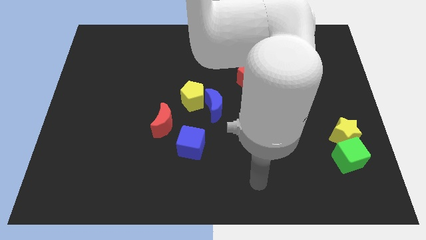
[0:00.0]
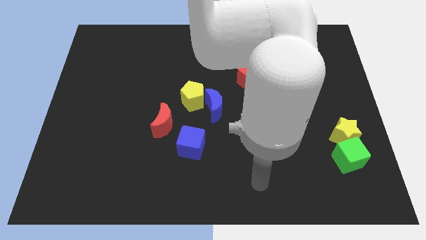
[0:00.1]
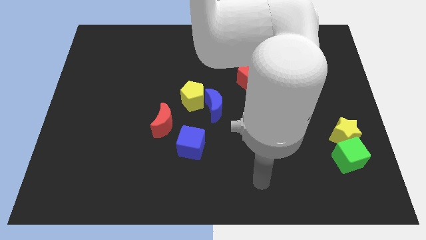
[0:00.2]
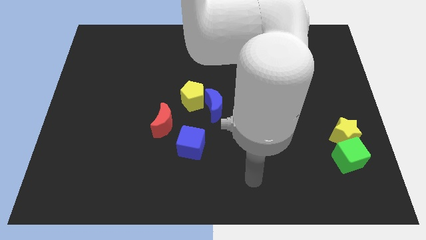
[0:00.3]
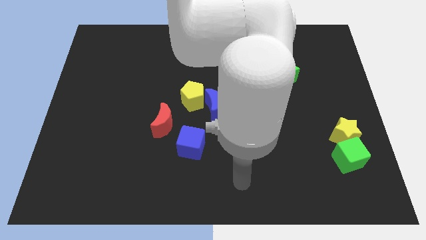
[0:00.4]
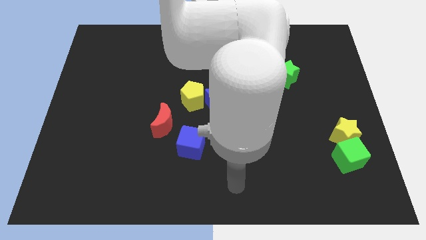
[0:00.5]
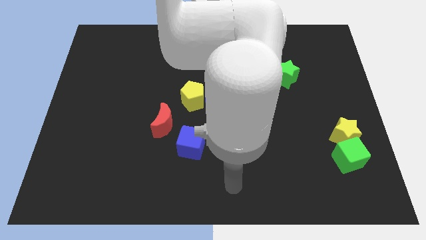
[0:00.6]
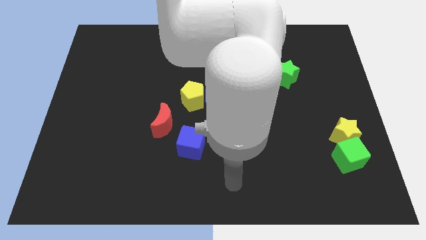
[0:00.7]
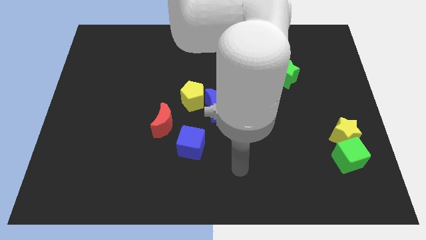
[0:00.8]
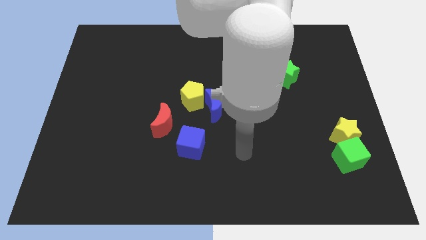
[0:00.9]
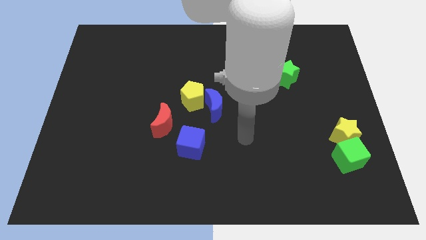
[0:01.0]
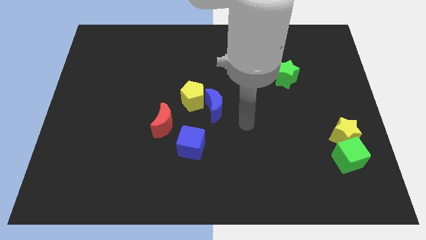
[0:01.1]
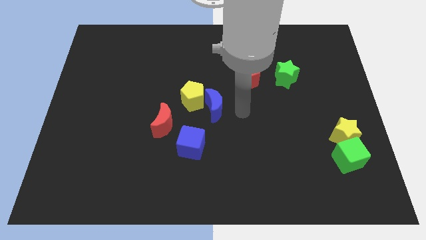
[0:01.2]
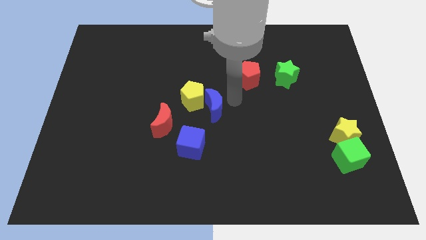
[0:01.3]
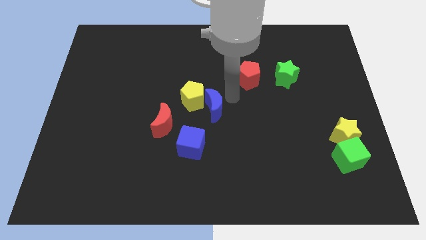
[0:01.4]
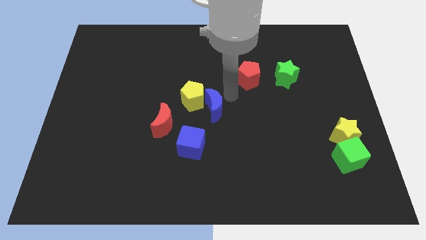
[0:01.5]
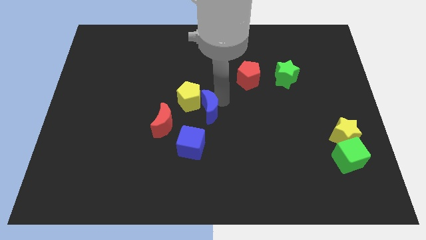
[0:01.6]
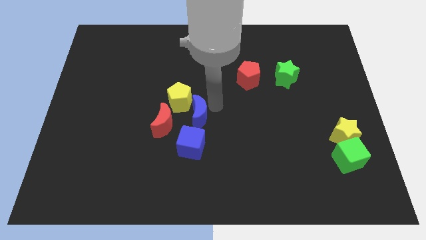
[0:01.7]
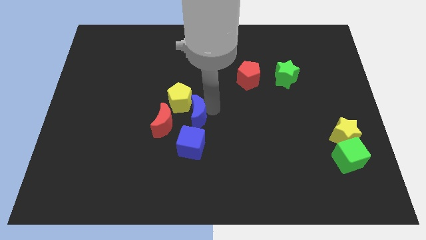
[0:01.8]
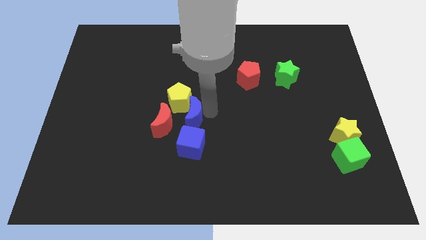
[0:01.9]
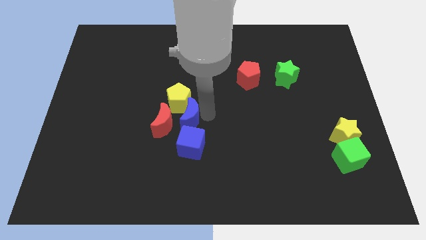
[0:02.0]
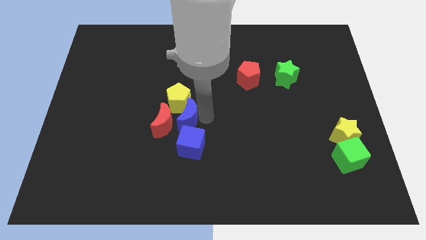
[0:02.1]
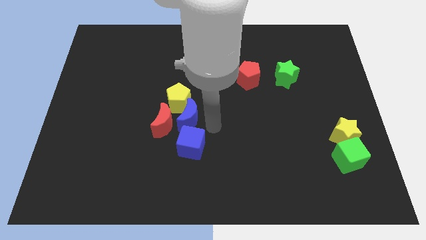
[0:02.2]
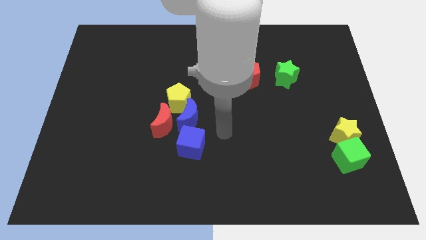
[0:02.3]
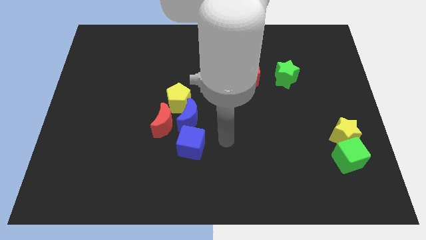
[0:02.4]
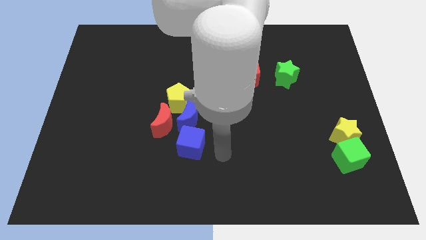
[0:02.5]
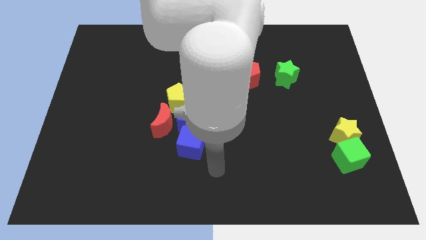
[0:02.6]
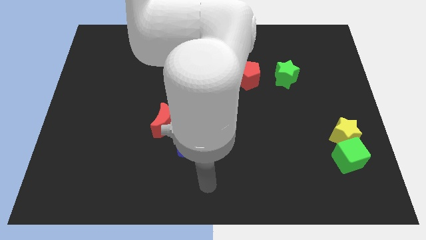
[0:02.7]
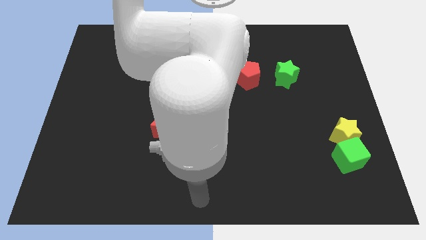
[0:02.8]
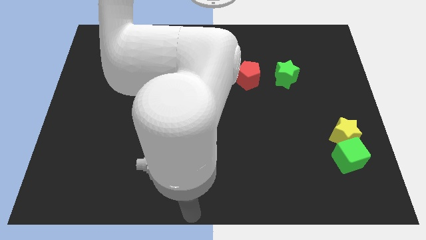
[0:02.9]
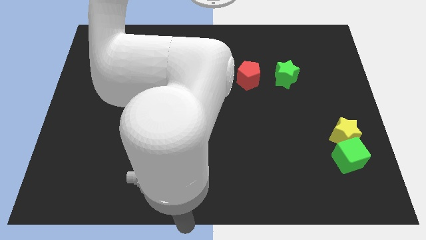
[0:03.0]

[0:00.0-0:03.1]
slide blue moon into yellow pentagon

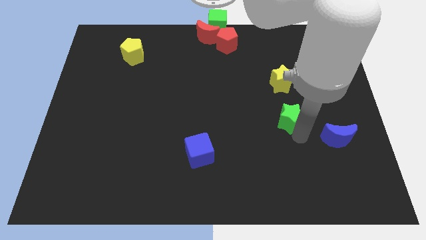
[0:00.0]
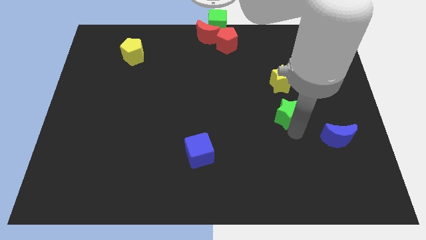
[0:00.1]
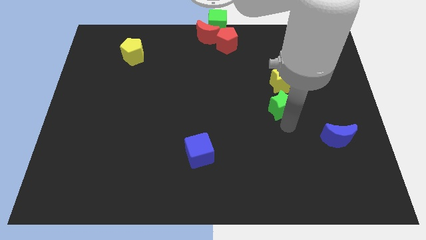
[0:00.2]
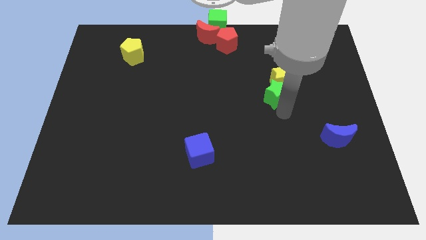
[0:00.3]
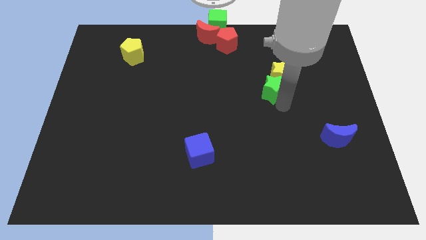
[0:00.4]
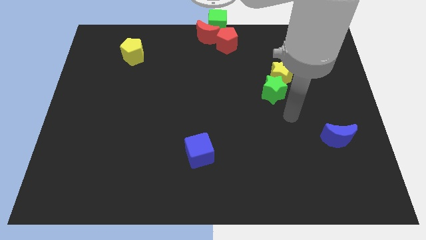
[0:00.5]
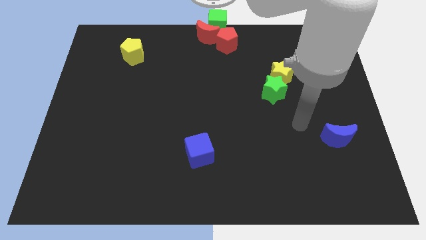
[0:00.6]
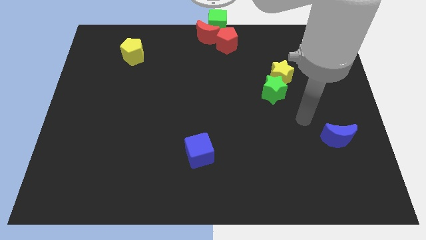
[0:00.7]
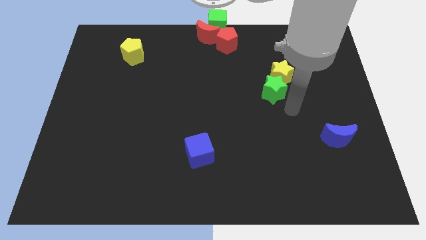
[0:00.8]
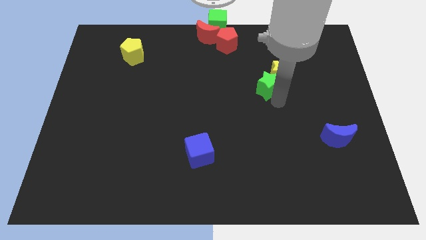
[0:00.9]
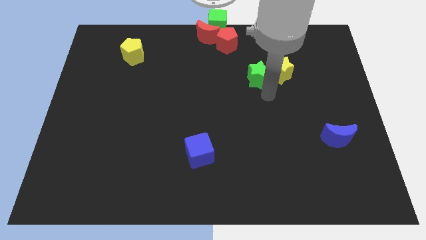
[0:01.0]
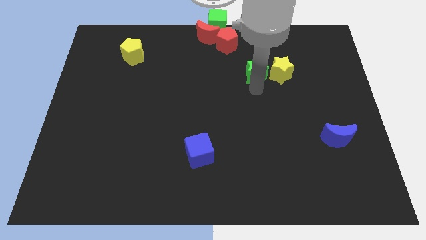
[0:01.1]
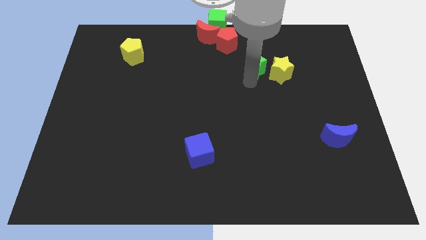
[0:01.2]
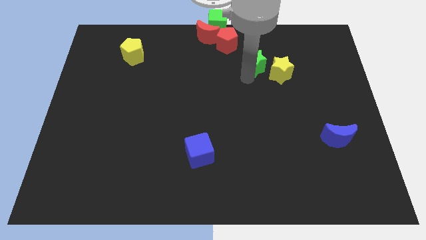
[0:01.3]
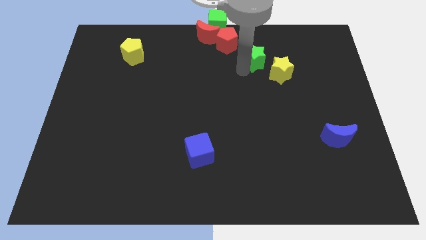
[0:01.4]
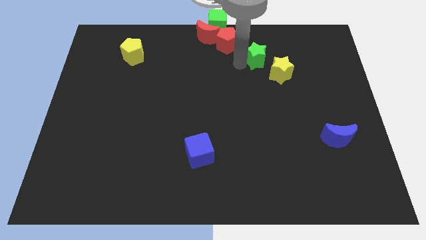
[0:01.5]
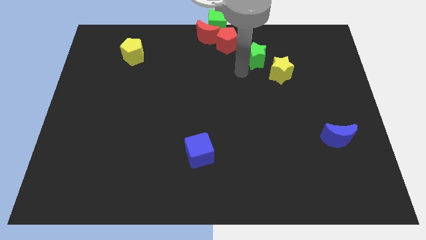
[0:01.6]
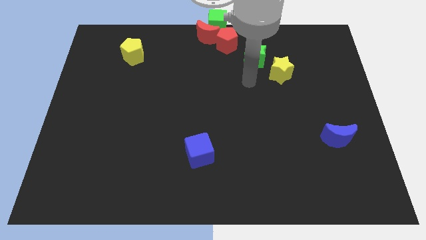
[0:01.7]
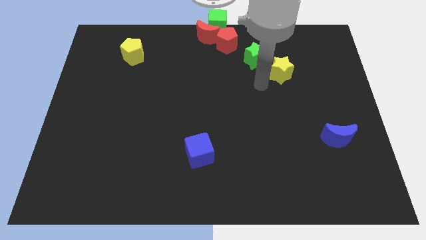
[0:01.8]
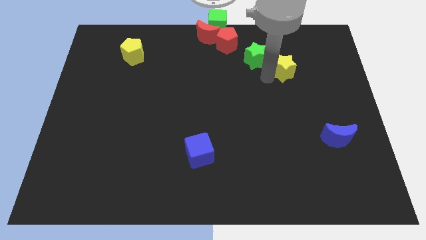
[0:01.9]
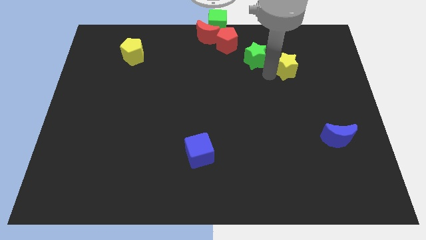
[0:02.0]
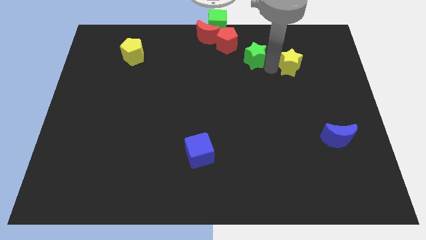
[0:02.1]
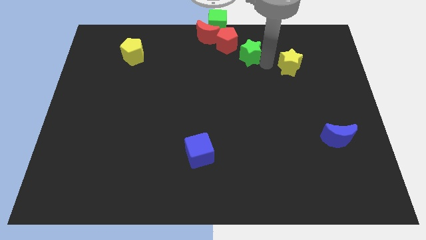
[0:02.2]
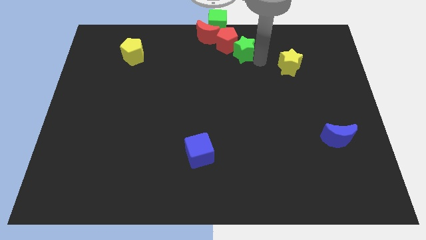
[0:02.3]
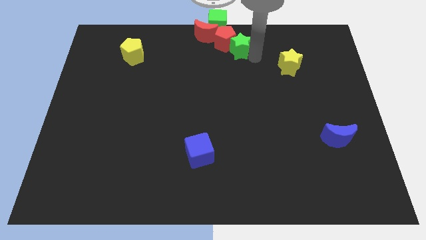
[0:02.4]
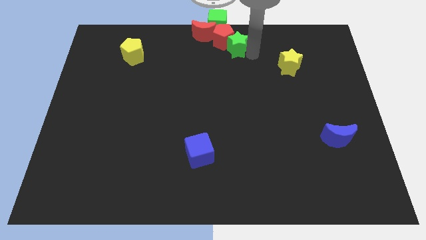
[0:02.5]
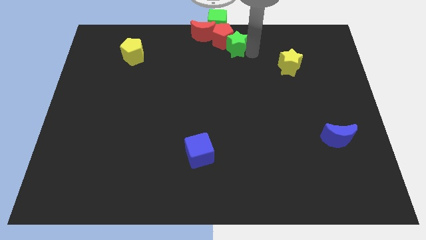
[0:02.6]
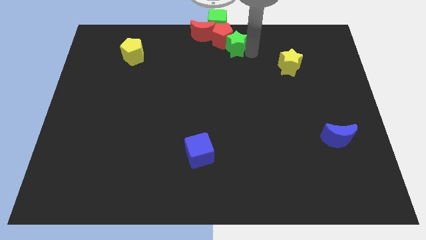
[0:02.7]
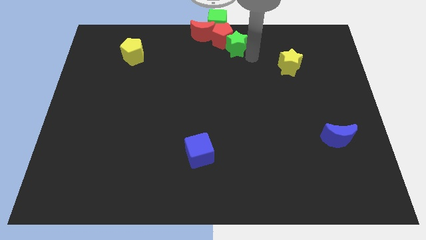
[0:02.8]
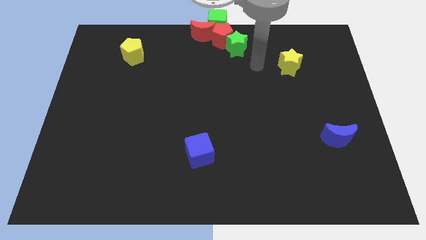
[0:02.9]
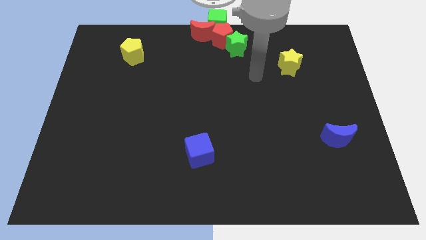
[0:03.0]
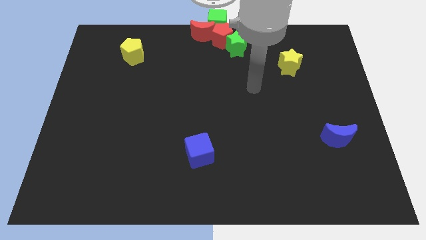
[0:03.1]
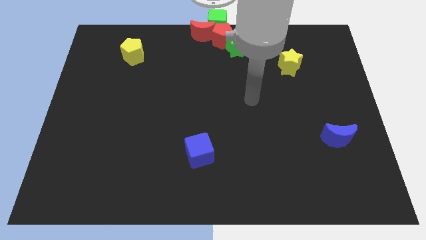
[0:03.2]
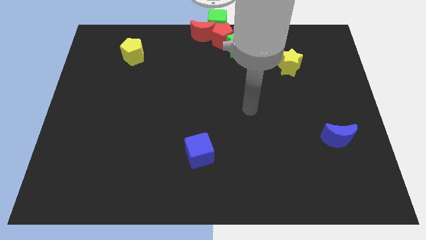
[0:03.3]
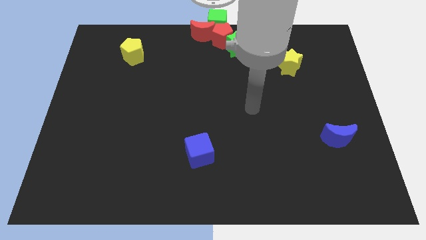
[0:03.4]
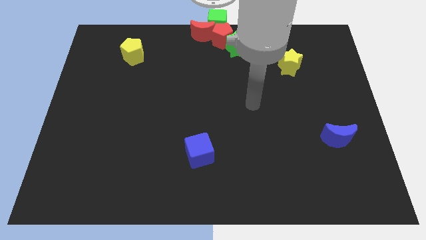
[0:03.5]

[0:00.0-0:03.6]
push the green star into the red pentagon

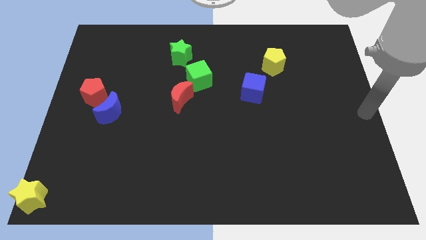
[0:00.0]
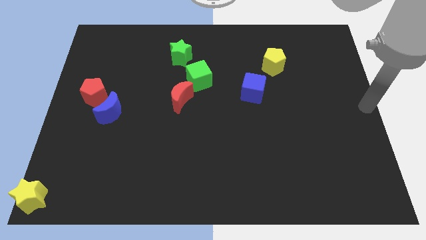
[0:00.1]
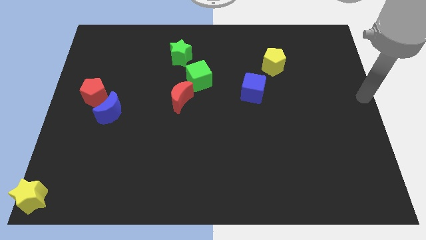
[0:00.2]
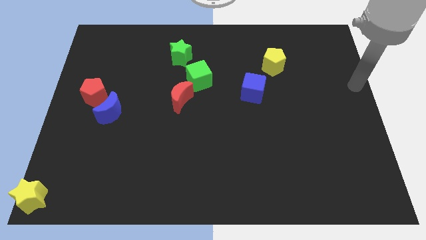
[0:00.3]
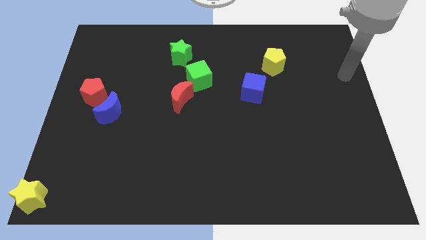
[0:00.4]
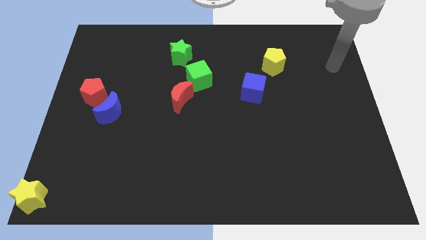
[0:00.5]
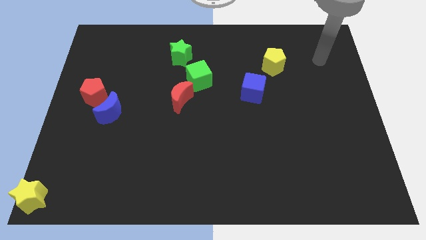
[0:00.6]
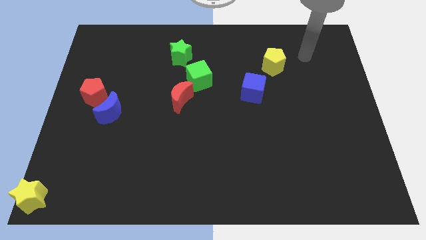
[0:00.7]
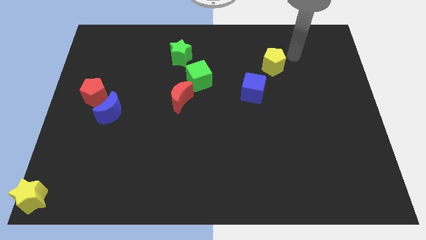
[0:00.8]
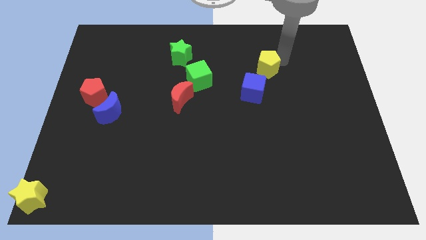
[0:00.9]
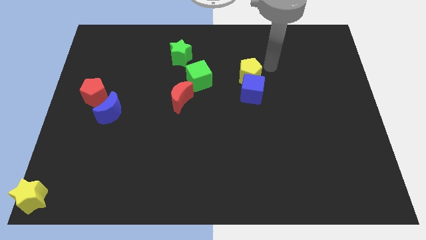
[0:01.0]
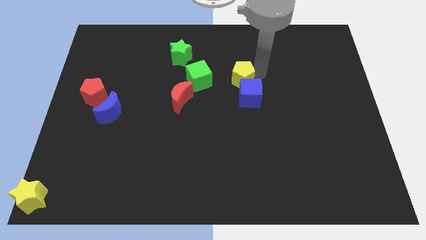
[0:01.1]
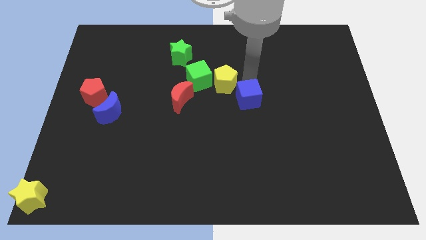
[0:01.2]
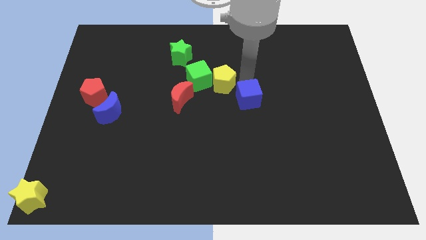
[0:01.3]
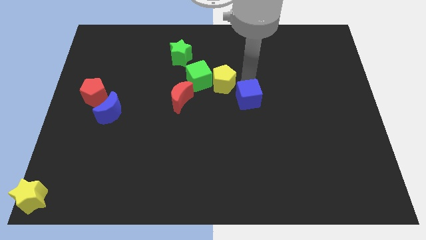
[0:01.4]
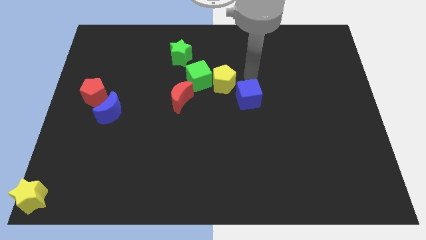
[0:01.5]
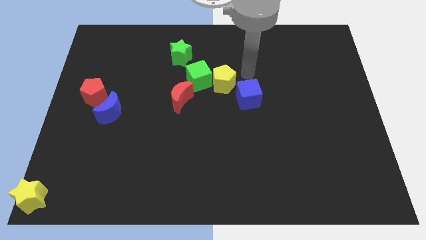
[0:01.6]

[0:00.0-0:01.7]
push the blue cube with yellow pentagon

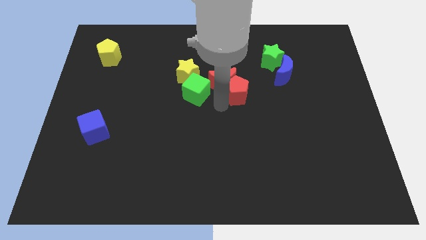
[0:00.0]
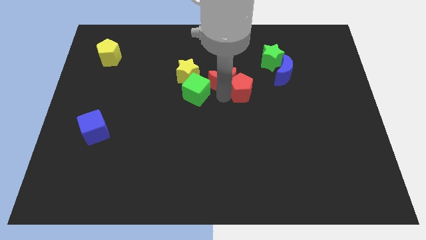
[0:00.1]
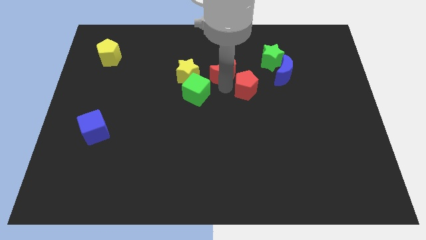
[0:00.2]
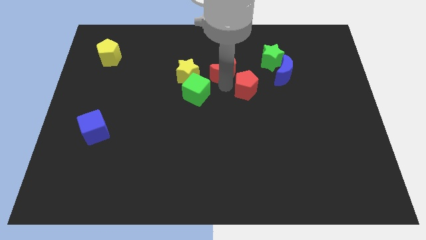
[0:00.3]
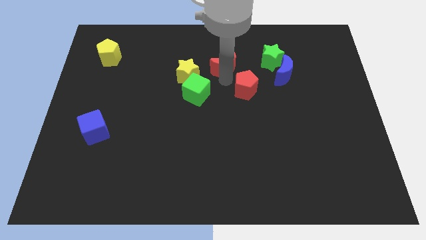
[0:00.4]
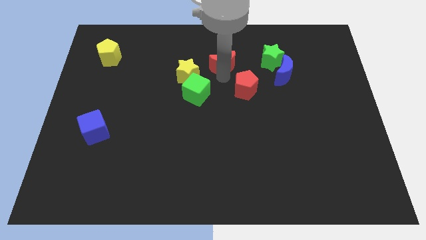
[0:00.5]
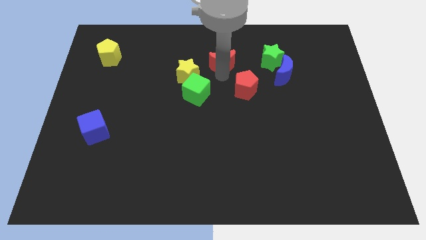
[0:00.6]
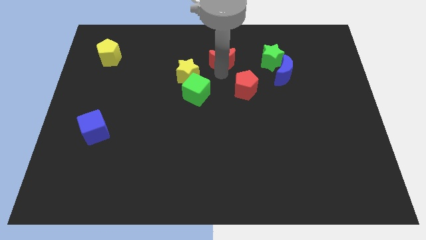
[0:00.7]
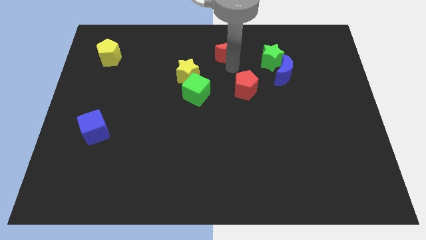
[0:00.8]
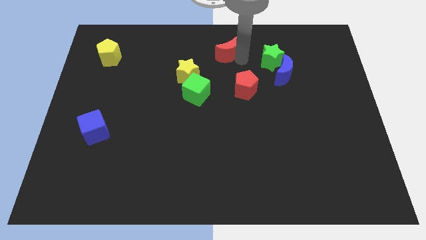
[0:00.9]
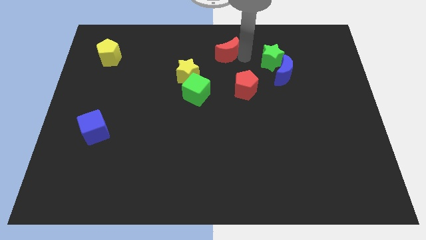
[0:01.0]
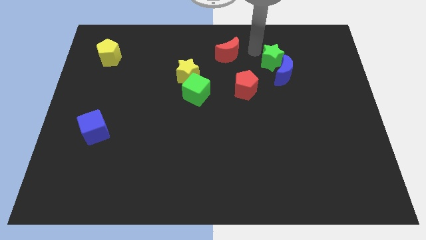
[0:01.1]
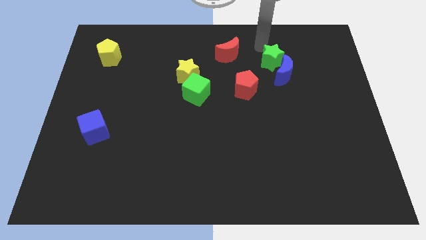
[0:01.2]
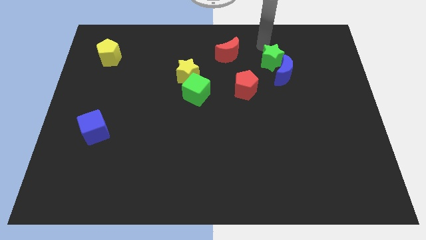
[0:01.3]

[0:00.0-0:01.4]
separate the red moon from the red pentagon
